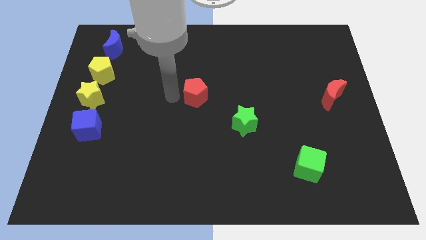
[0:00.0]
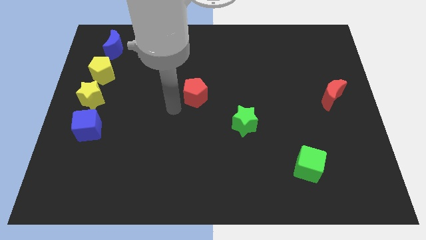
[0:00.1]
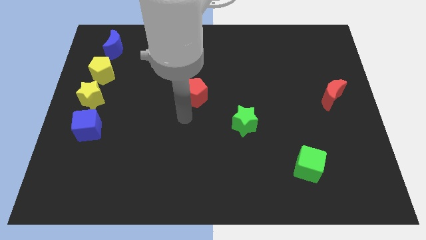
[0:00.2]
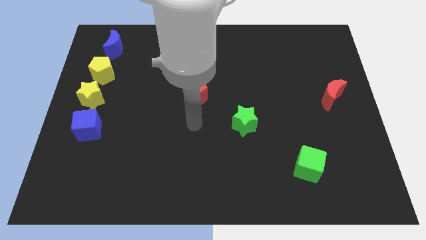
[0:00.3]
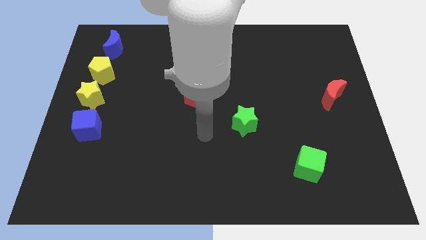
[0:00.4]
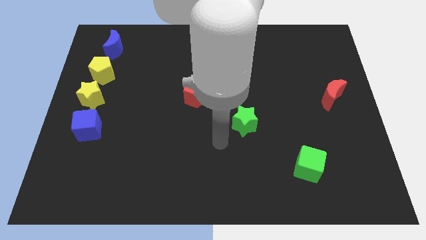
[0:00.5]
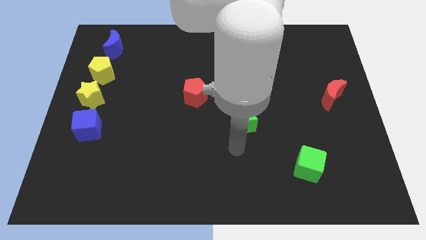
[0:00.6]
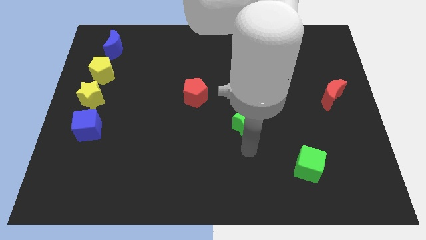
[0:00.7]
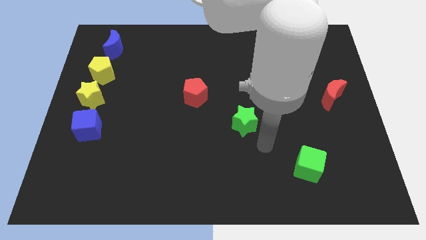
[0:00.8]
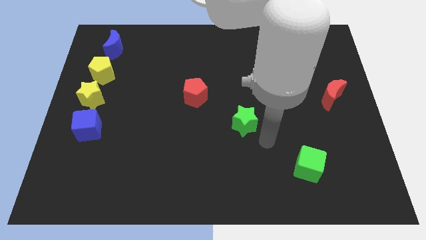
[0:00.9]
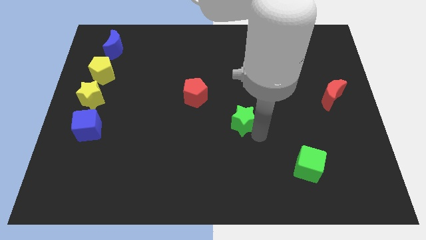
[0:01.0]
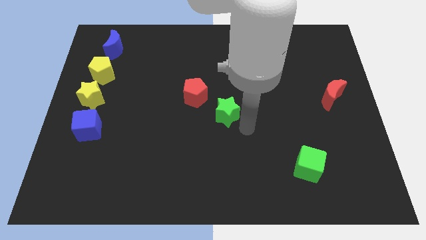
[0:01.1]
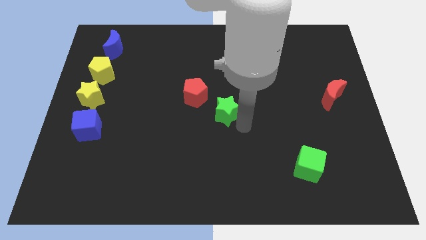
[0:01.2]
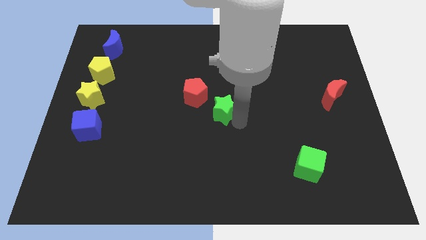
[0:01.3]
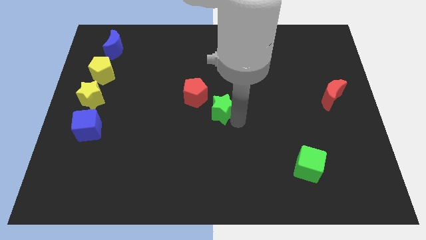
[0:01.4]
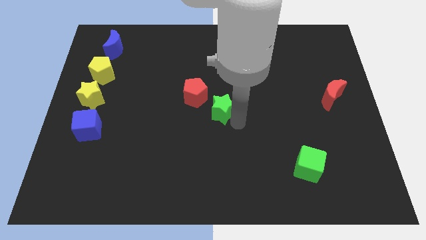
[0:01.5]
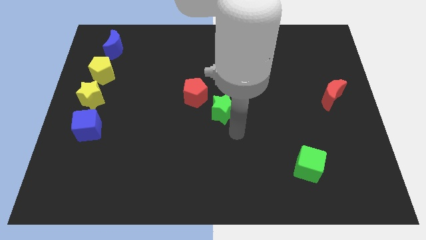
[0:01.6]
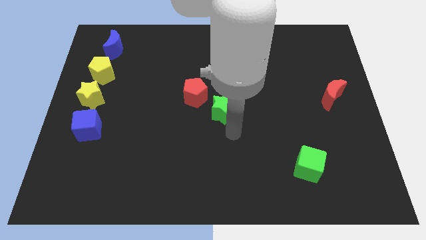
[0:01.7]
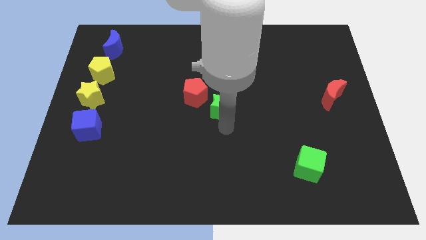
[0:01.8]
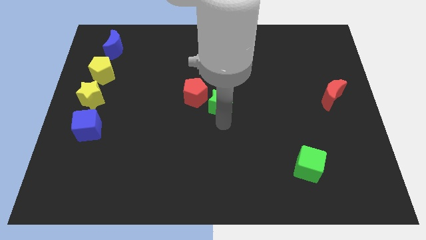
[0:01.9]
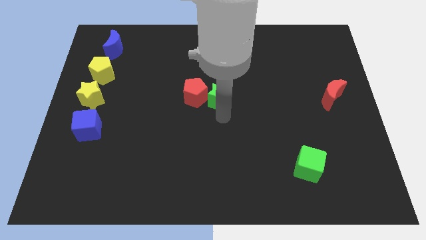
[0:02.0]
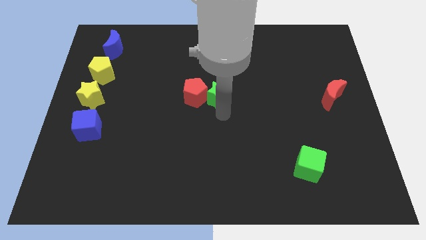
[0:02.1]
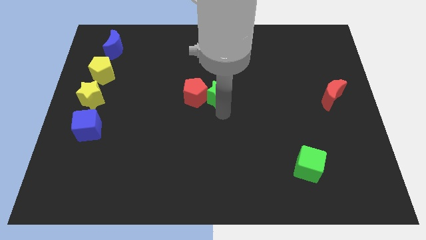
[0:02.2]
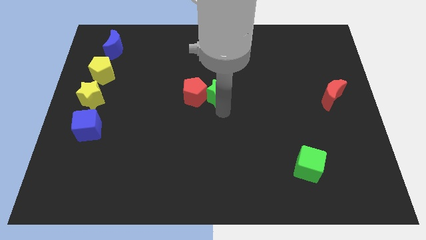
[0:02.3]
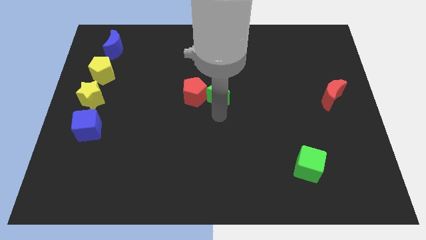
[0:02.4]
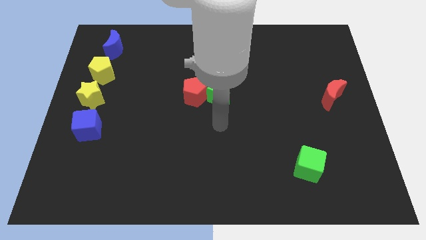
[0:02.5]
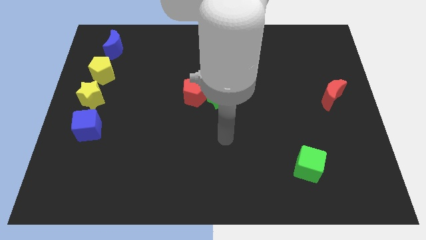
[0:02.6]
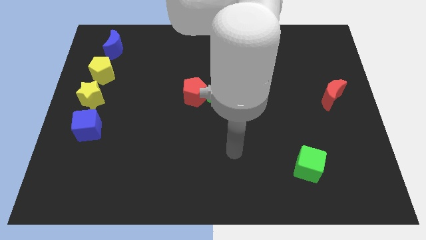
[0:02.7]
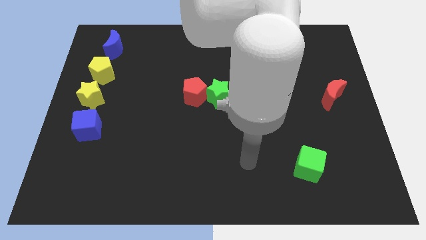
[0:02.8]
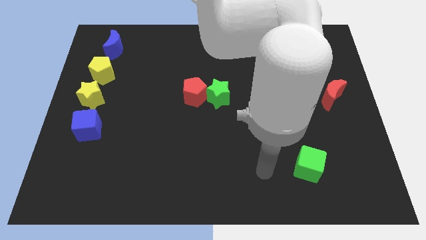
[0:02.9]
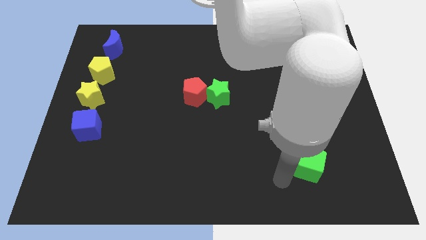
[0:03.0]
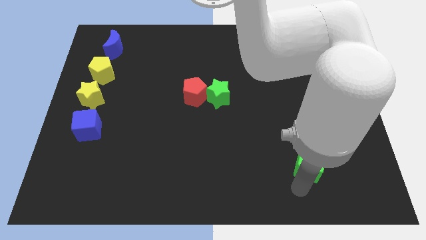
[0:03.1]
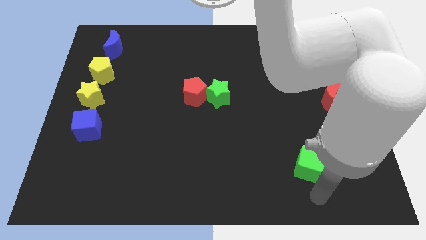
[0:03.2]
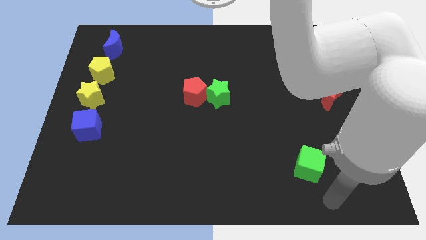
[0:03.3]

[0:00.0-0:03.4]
move the green star into the red pentagon

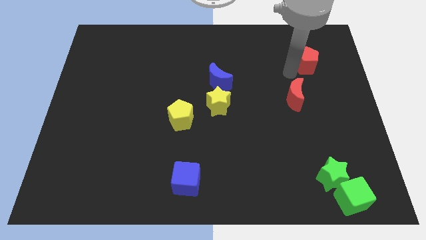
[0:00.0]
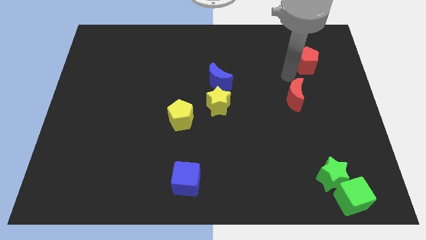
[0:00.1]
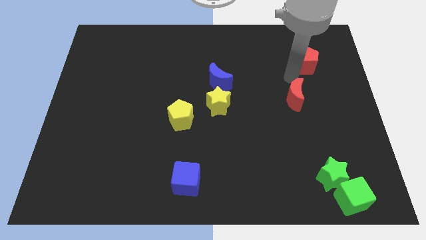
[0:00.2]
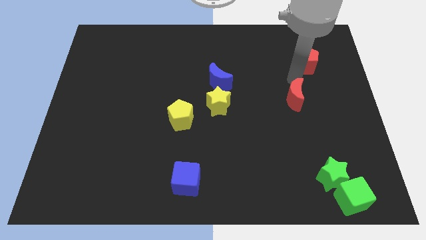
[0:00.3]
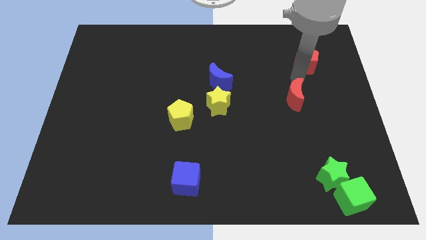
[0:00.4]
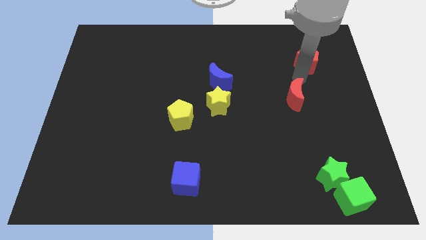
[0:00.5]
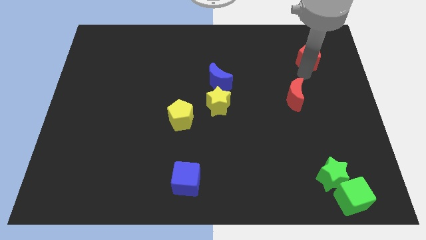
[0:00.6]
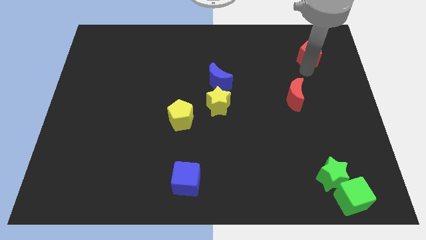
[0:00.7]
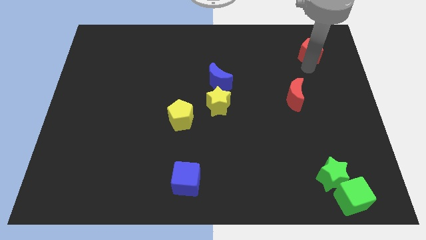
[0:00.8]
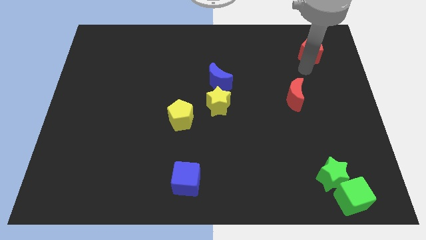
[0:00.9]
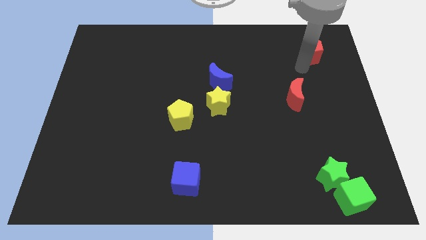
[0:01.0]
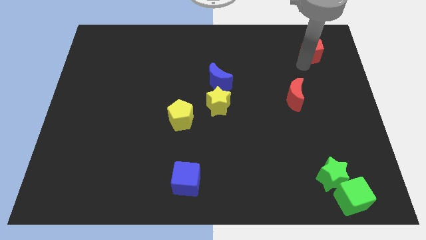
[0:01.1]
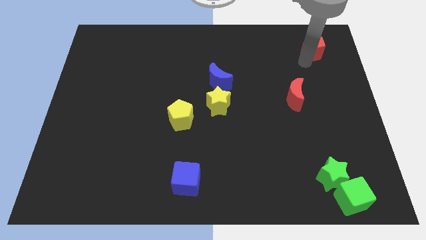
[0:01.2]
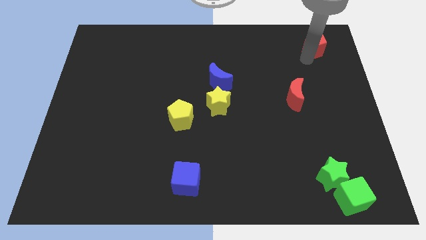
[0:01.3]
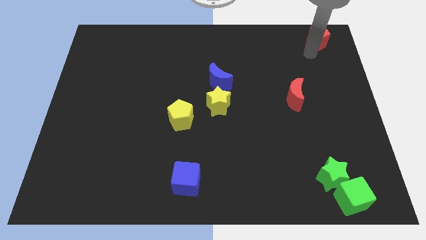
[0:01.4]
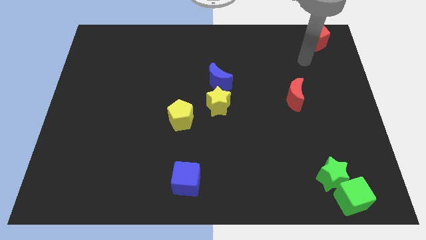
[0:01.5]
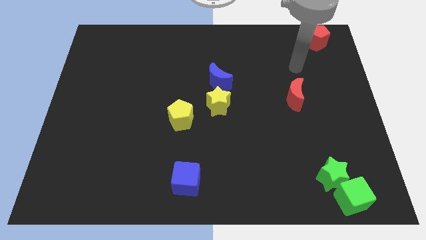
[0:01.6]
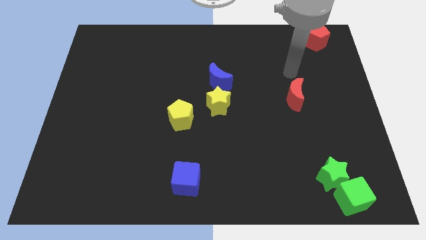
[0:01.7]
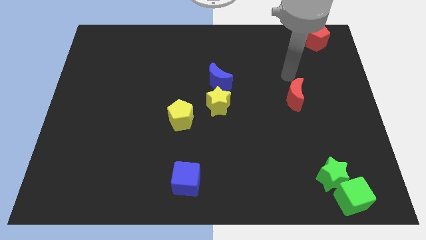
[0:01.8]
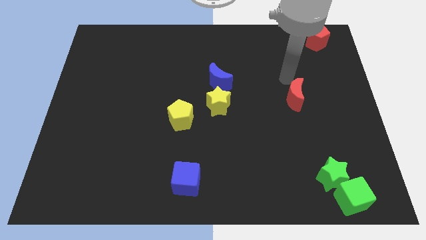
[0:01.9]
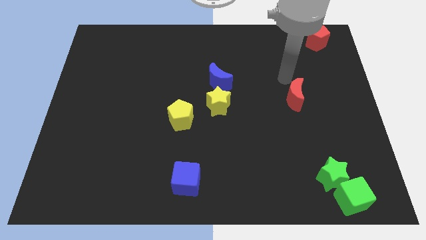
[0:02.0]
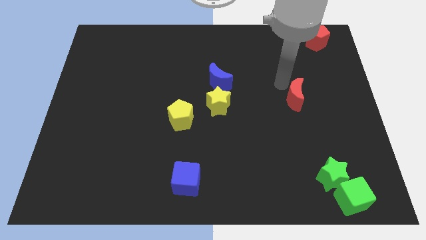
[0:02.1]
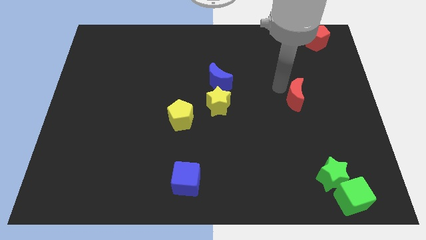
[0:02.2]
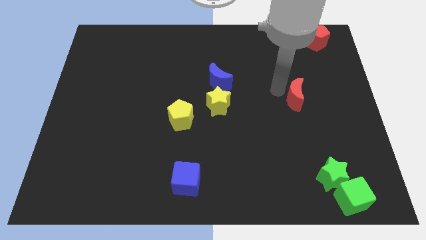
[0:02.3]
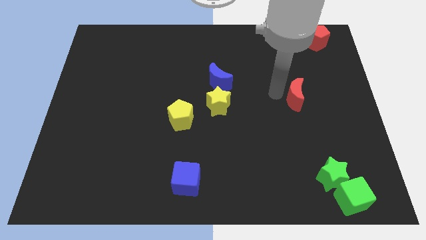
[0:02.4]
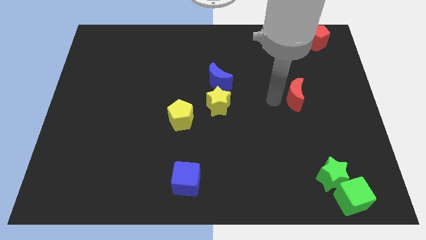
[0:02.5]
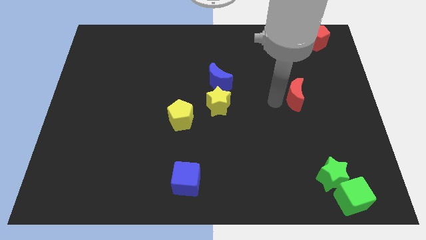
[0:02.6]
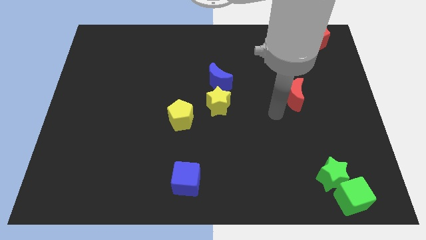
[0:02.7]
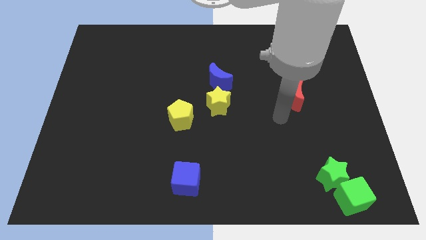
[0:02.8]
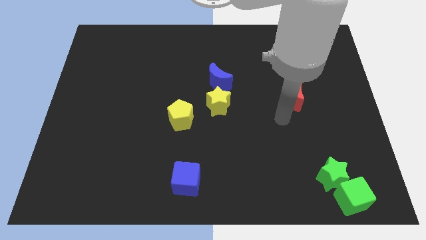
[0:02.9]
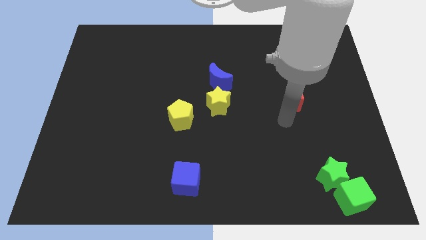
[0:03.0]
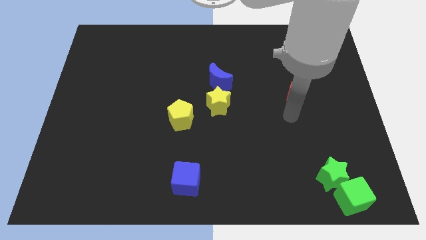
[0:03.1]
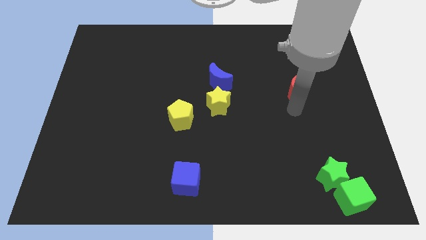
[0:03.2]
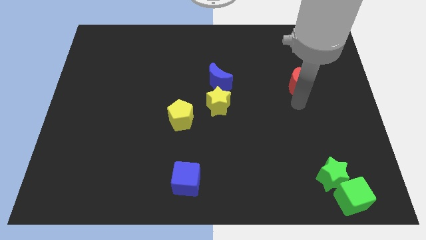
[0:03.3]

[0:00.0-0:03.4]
move the red pentagon towards right corner top of the board

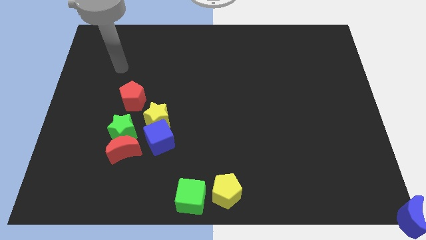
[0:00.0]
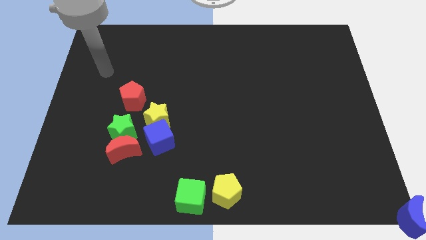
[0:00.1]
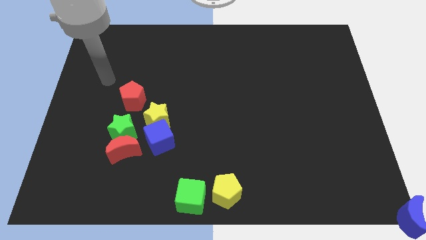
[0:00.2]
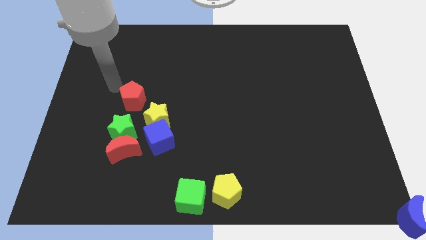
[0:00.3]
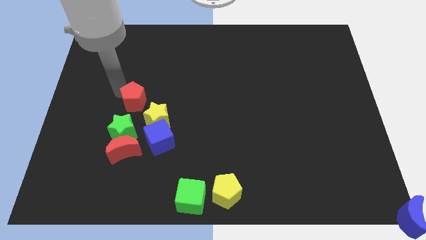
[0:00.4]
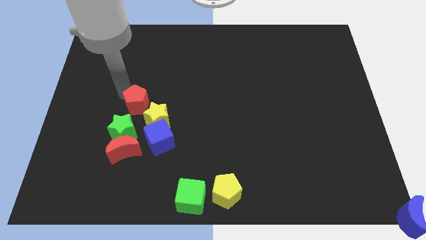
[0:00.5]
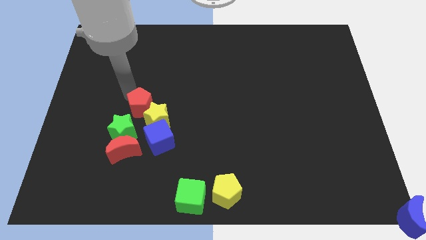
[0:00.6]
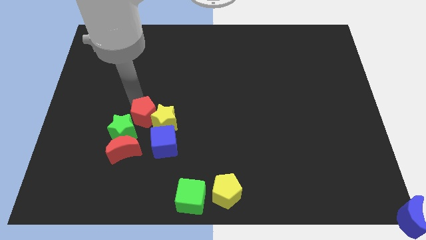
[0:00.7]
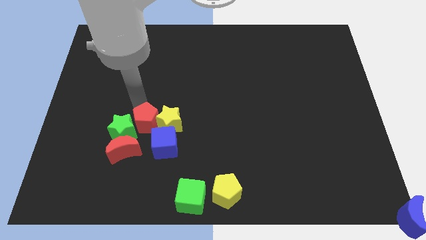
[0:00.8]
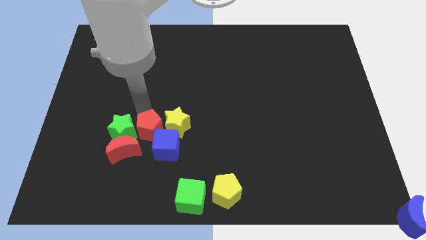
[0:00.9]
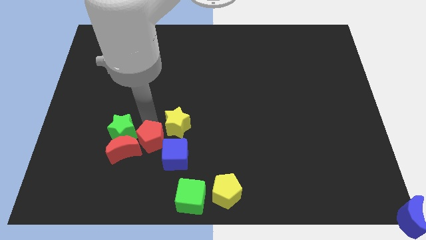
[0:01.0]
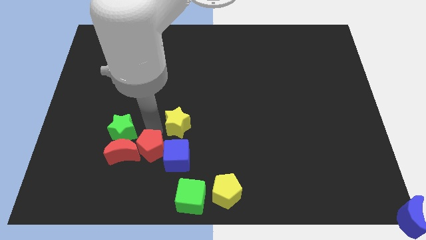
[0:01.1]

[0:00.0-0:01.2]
push the red pentagon to the right of the red crescent

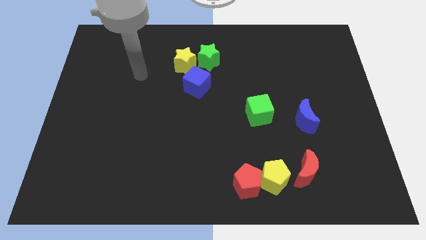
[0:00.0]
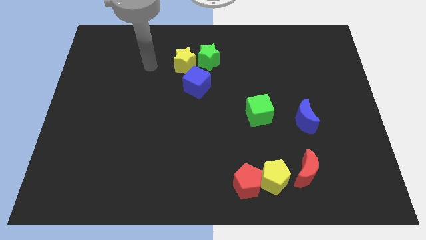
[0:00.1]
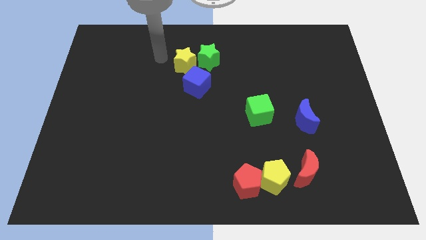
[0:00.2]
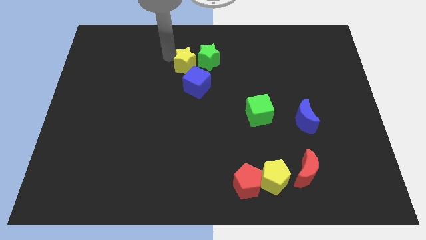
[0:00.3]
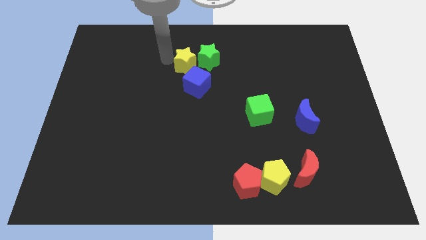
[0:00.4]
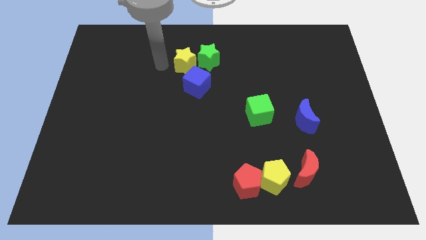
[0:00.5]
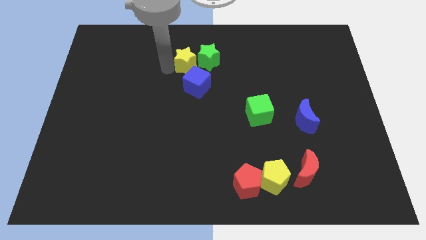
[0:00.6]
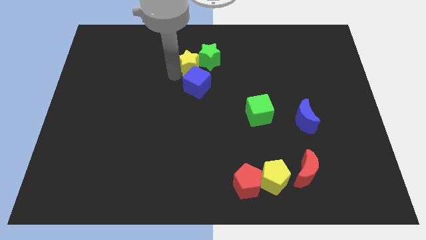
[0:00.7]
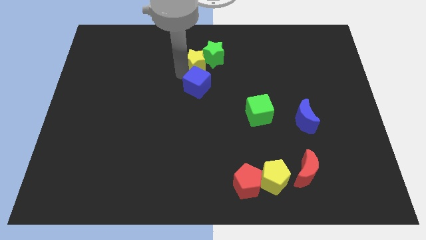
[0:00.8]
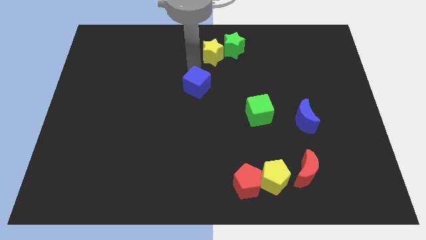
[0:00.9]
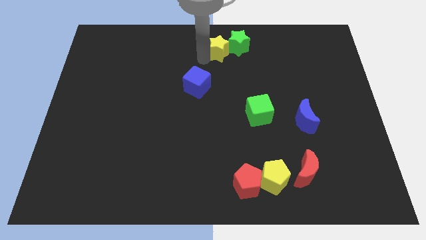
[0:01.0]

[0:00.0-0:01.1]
push the yellow star into the green star
